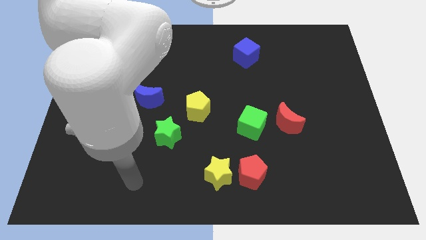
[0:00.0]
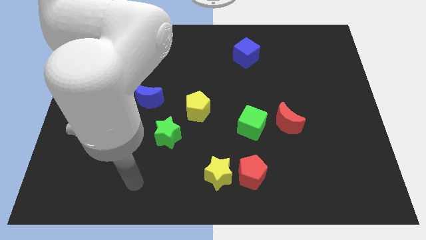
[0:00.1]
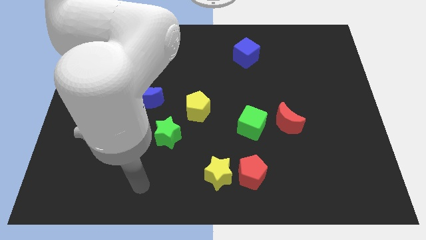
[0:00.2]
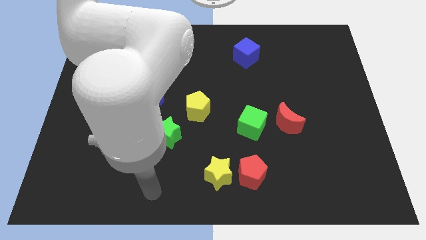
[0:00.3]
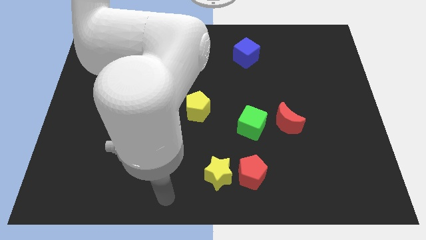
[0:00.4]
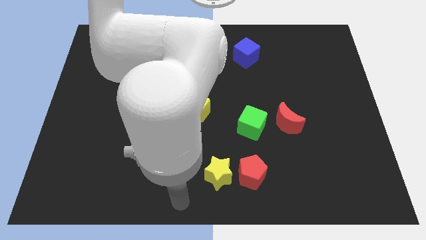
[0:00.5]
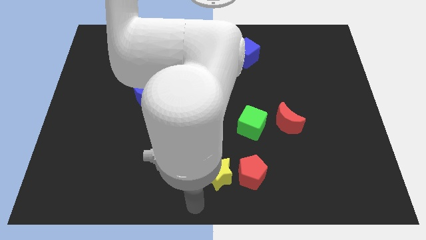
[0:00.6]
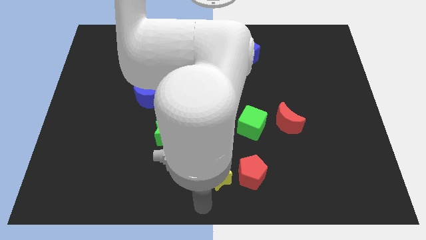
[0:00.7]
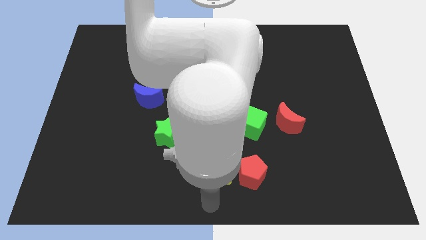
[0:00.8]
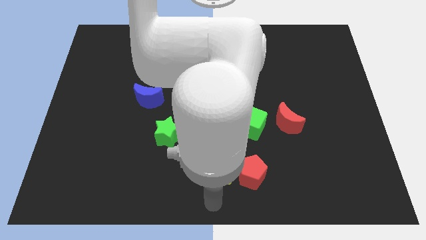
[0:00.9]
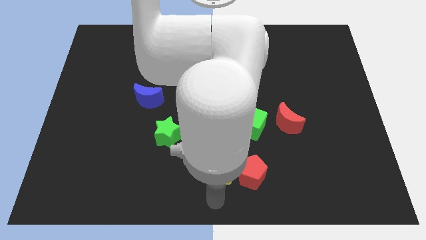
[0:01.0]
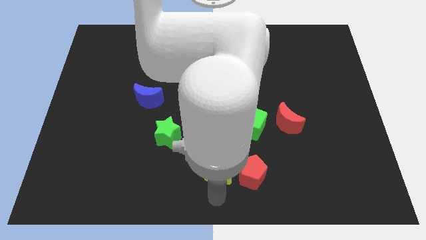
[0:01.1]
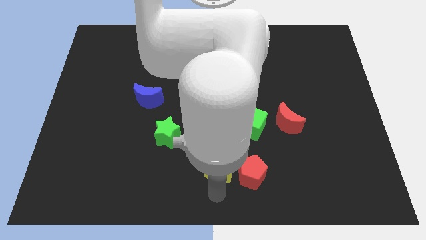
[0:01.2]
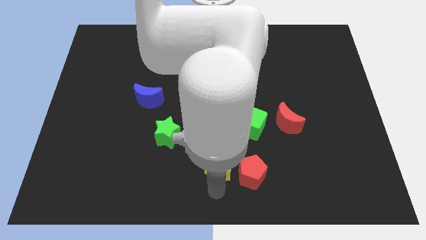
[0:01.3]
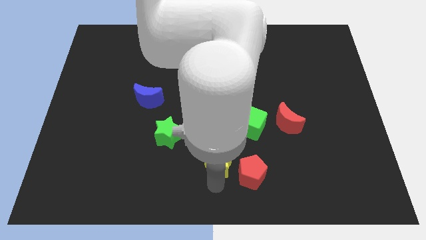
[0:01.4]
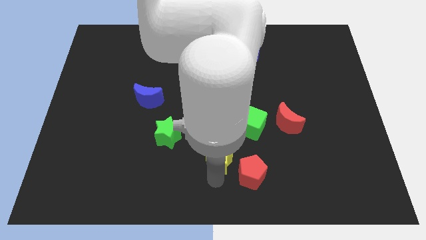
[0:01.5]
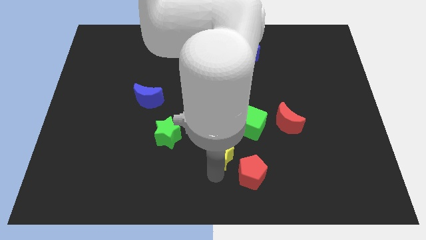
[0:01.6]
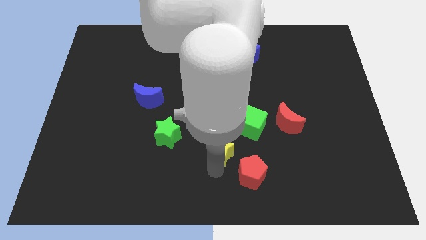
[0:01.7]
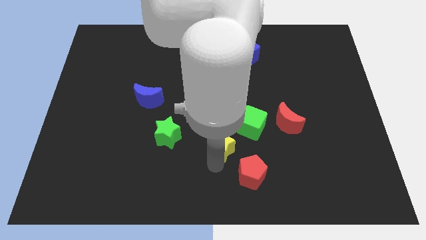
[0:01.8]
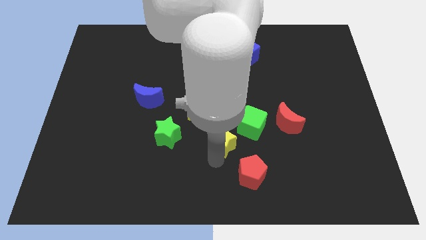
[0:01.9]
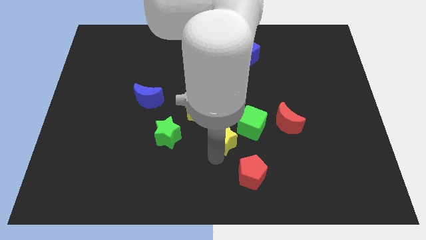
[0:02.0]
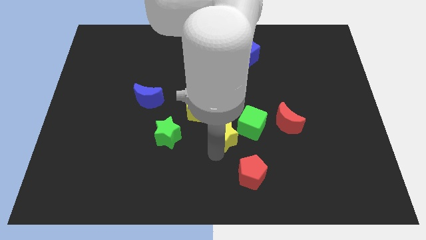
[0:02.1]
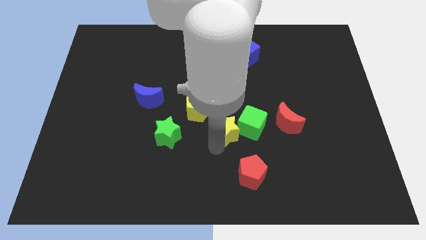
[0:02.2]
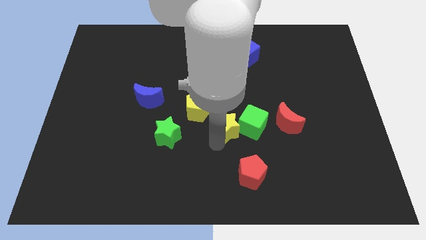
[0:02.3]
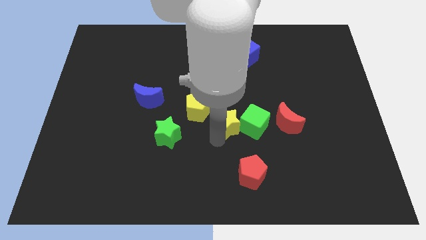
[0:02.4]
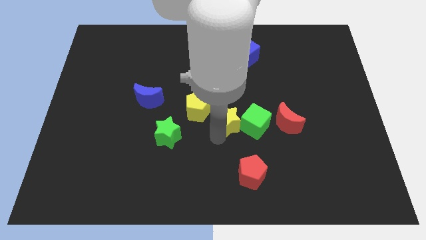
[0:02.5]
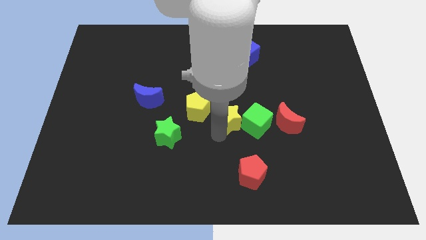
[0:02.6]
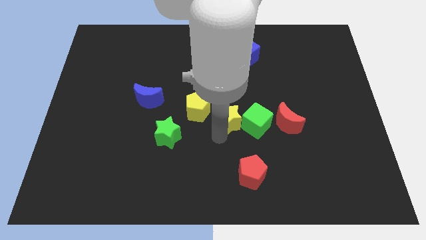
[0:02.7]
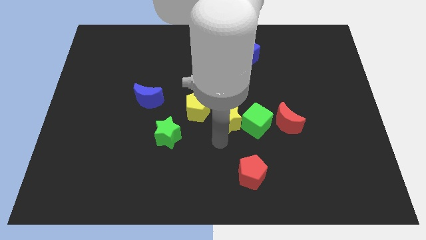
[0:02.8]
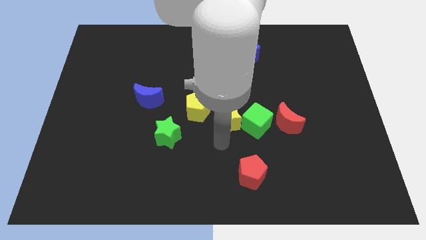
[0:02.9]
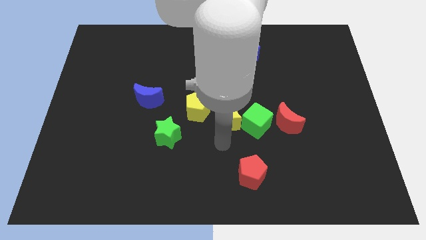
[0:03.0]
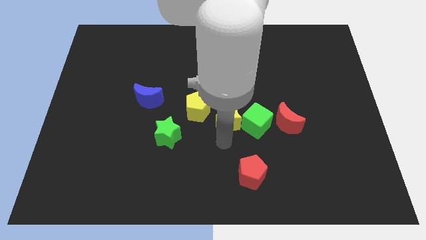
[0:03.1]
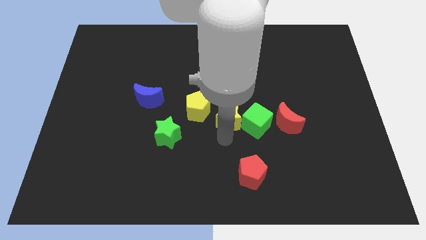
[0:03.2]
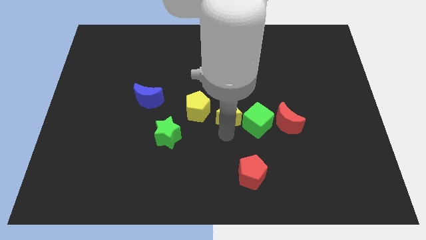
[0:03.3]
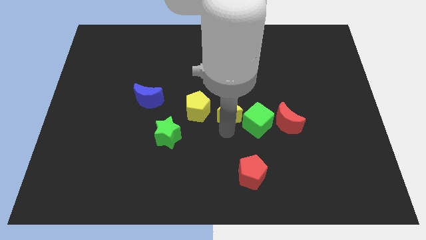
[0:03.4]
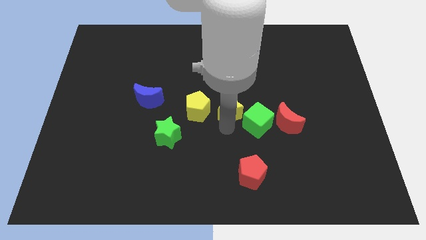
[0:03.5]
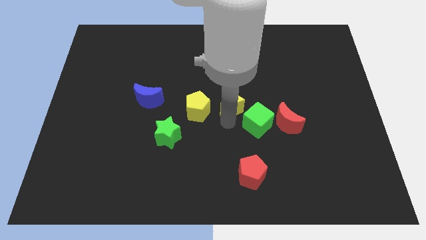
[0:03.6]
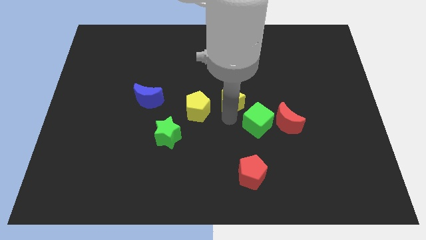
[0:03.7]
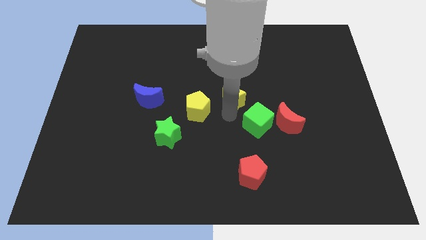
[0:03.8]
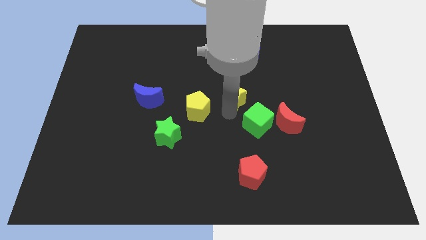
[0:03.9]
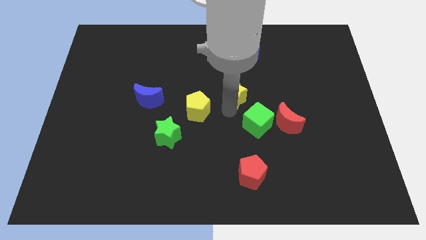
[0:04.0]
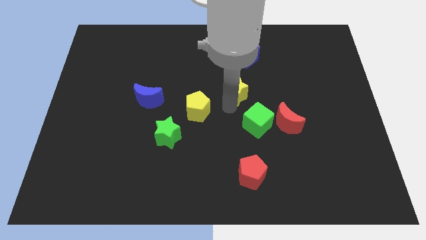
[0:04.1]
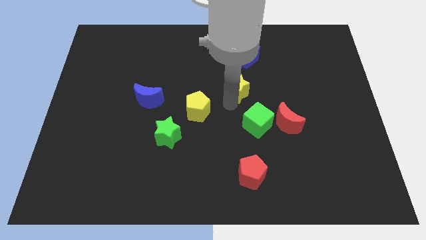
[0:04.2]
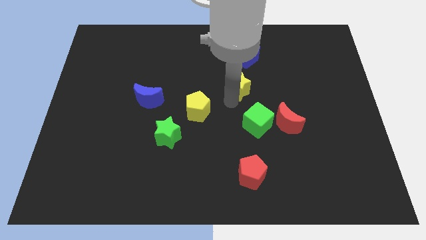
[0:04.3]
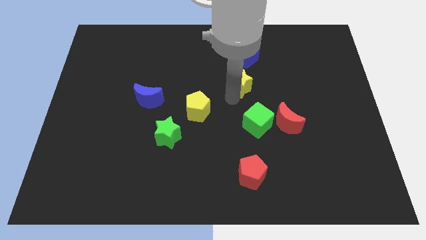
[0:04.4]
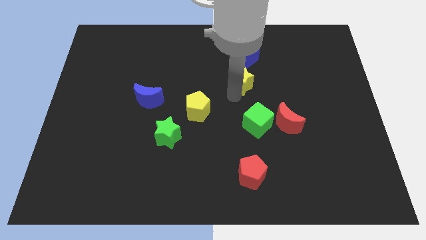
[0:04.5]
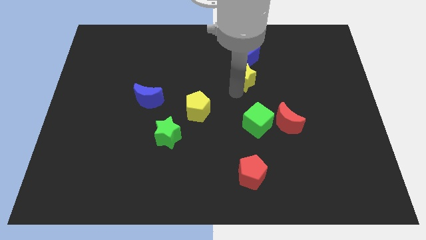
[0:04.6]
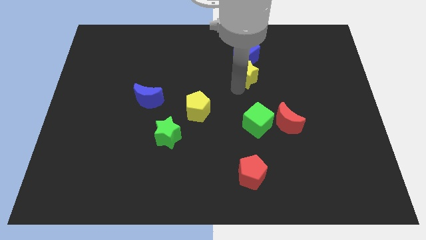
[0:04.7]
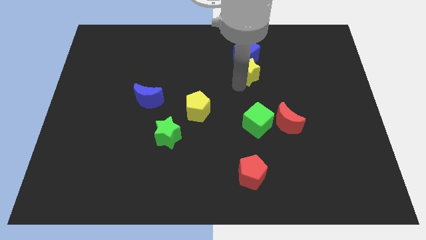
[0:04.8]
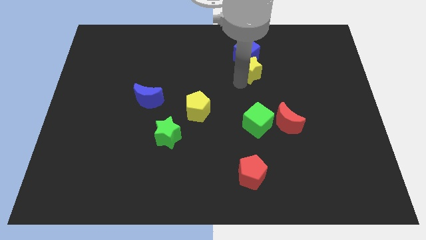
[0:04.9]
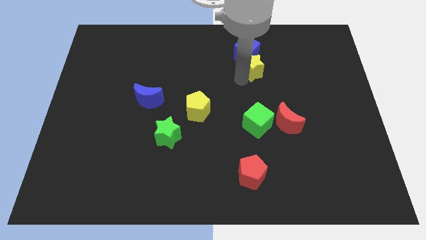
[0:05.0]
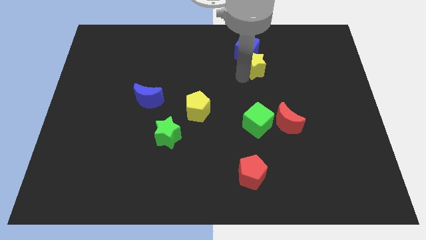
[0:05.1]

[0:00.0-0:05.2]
move the yellow star close to the blue cube

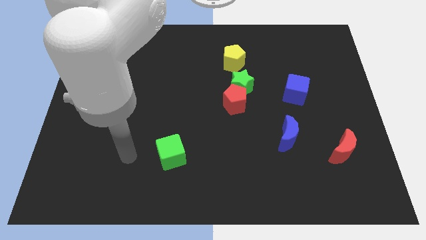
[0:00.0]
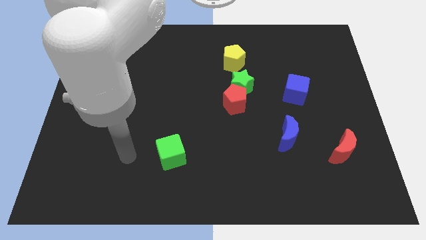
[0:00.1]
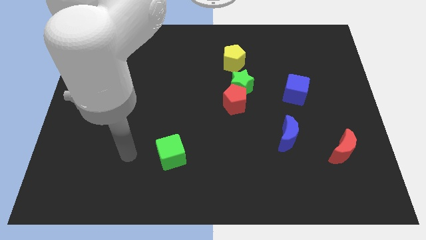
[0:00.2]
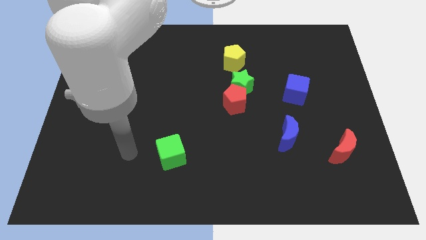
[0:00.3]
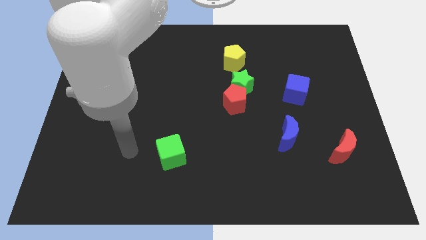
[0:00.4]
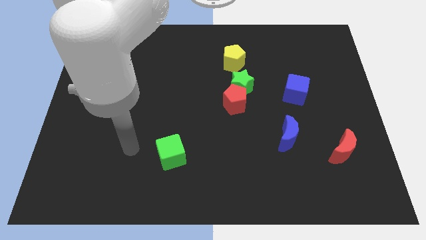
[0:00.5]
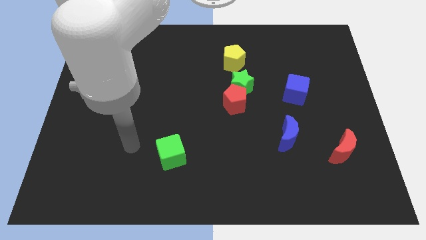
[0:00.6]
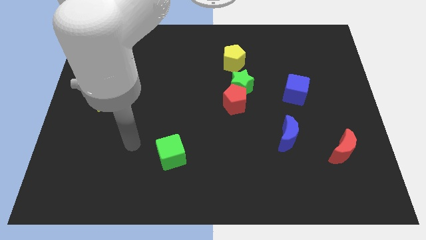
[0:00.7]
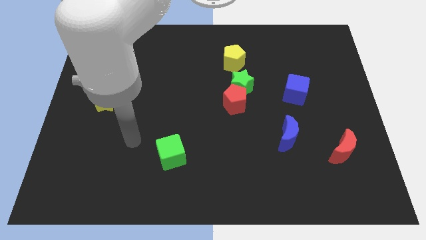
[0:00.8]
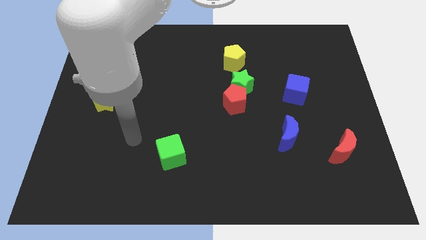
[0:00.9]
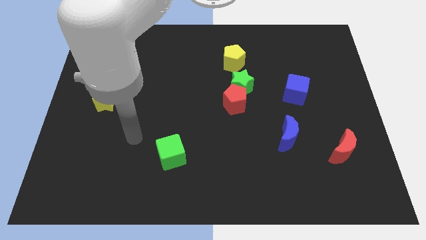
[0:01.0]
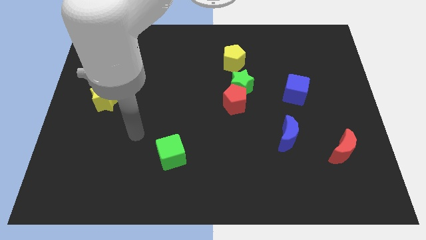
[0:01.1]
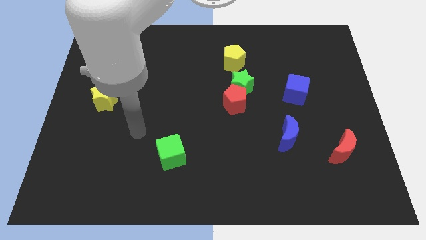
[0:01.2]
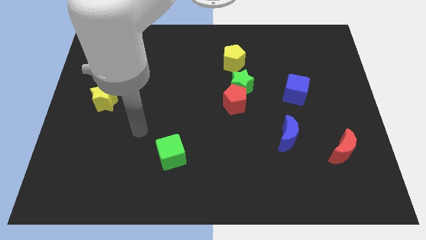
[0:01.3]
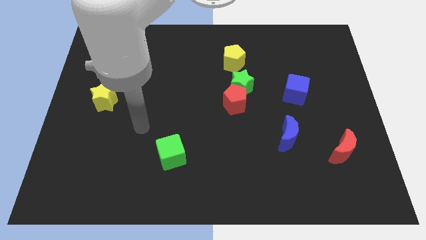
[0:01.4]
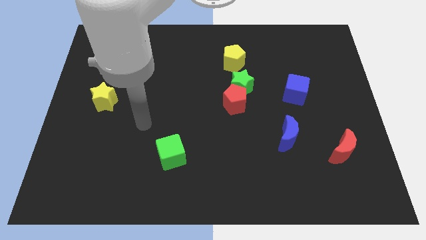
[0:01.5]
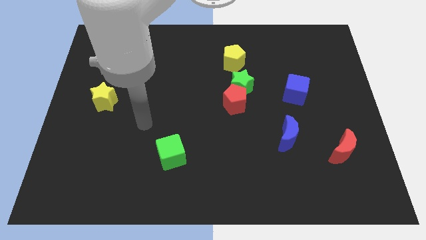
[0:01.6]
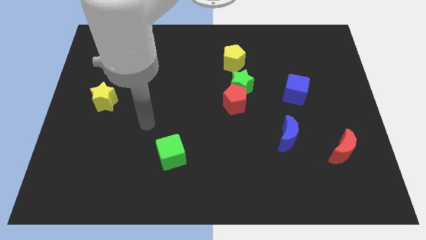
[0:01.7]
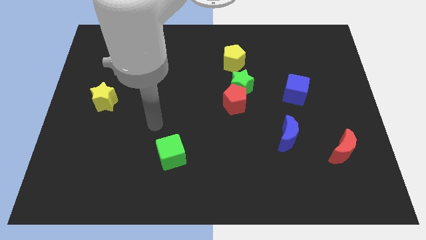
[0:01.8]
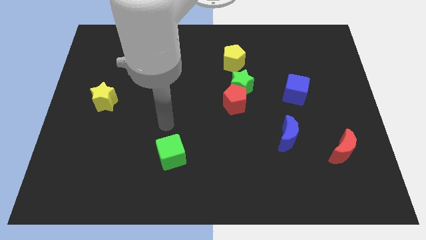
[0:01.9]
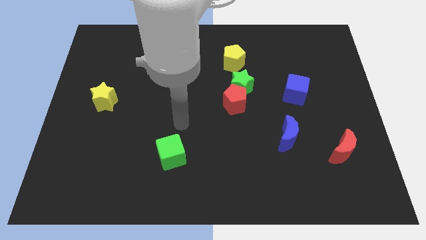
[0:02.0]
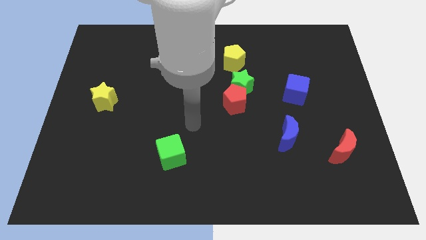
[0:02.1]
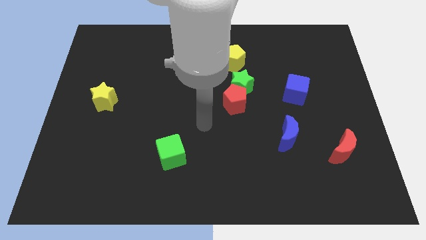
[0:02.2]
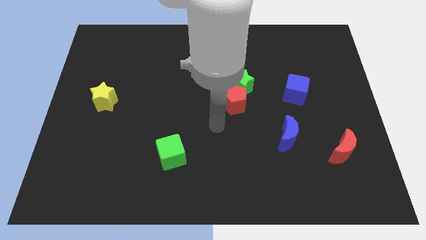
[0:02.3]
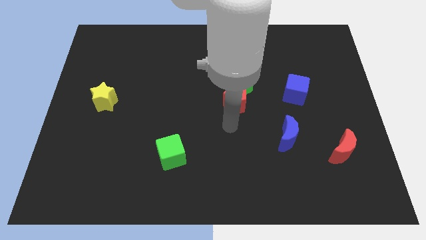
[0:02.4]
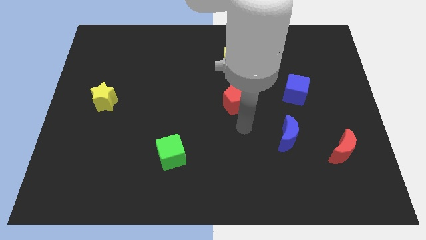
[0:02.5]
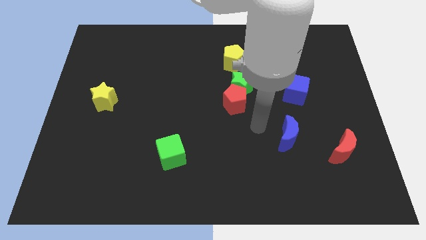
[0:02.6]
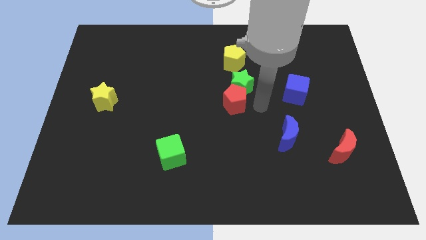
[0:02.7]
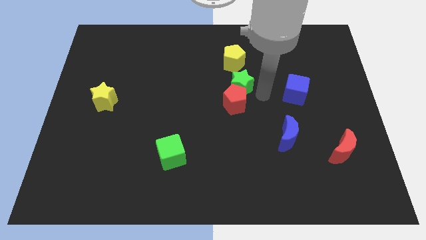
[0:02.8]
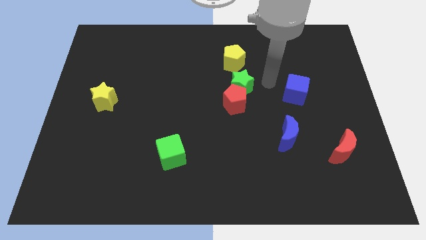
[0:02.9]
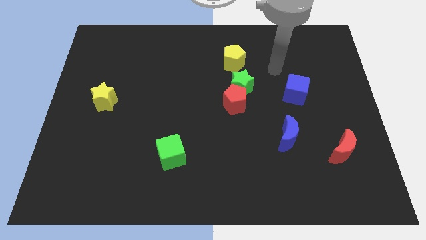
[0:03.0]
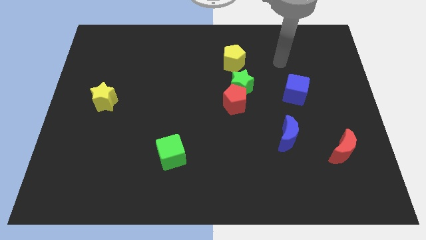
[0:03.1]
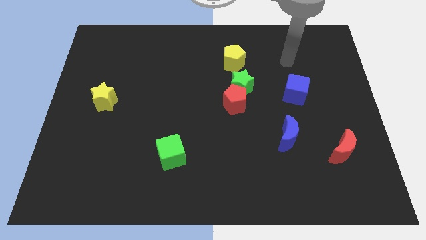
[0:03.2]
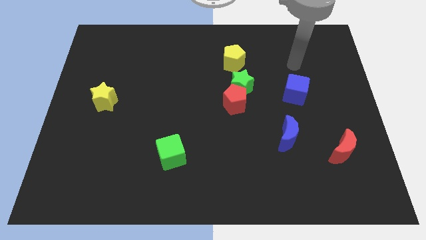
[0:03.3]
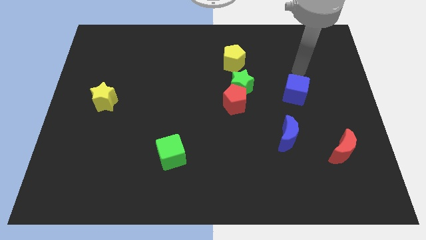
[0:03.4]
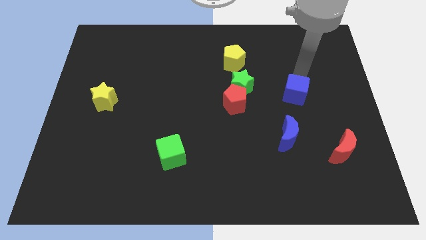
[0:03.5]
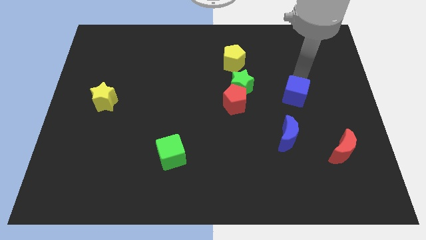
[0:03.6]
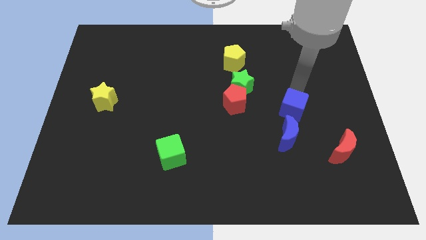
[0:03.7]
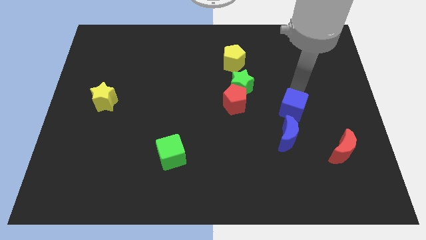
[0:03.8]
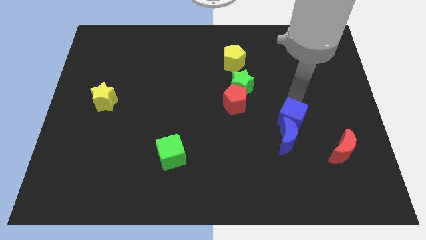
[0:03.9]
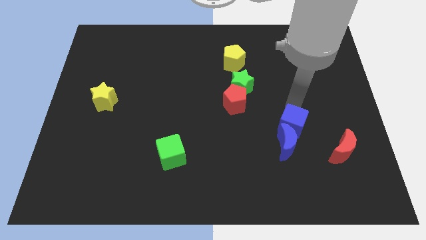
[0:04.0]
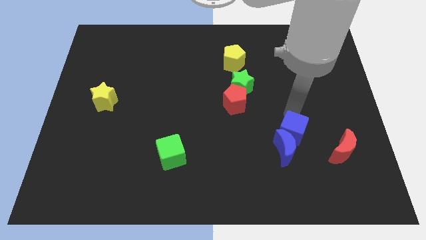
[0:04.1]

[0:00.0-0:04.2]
push the blue cube next to the blue moon
